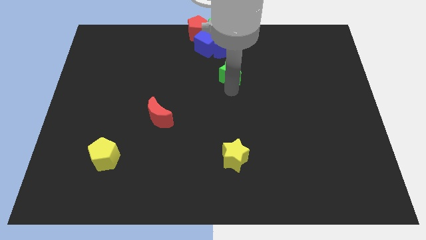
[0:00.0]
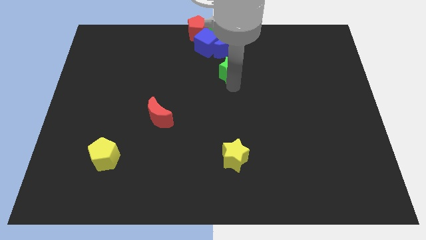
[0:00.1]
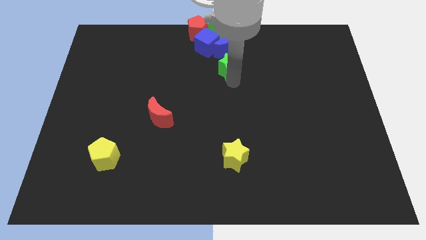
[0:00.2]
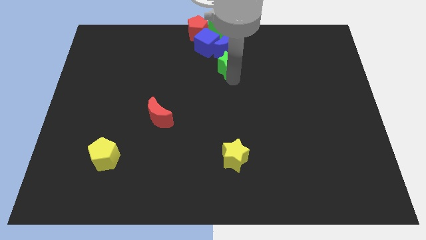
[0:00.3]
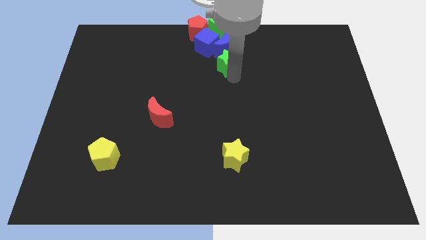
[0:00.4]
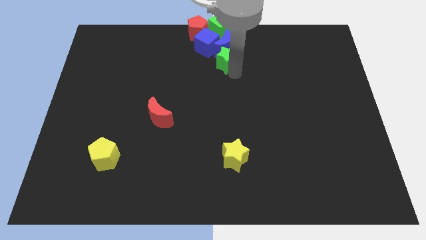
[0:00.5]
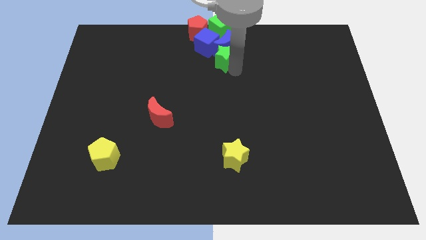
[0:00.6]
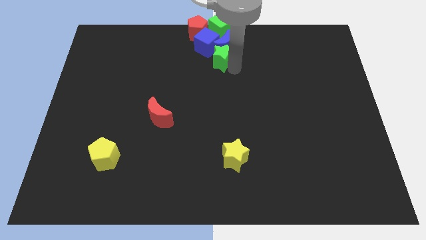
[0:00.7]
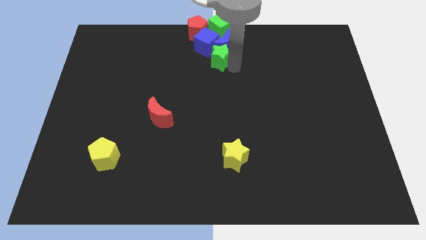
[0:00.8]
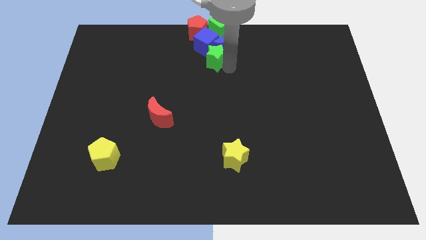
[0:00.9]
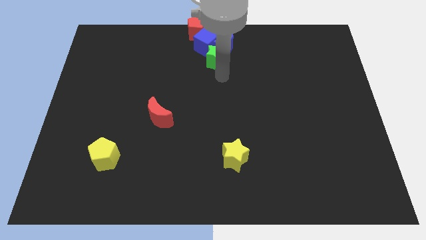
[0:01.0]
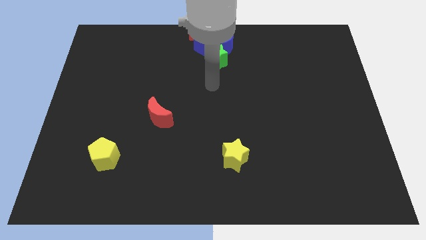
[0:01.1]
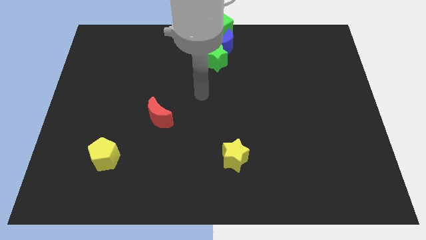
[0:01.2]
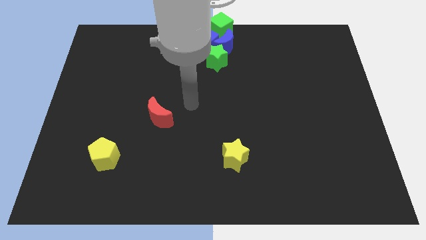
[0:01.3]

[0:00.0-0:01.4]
place the green star below the blue crescent

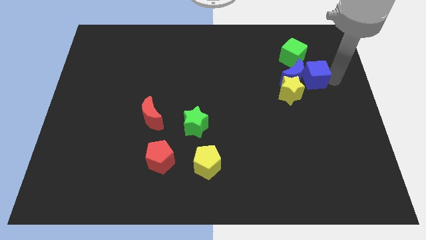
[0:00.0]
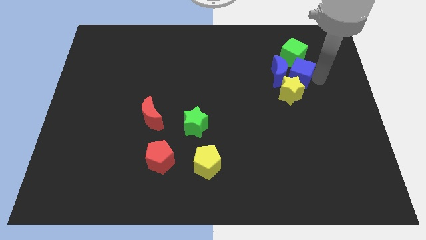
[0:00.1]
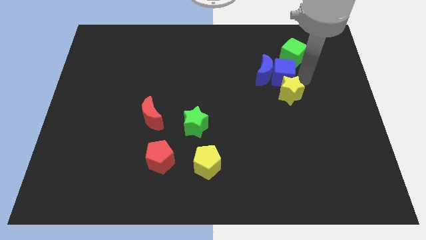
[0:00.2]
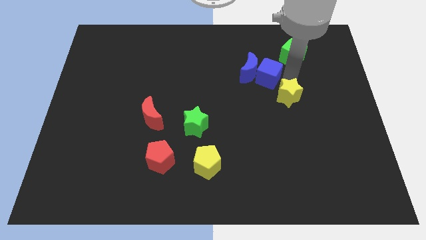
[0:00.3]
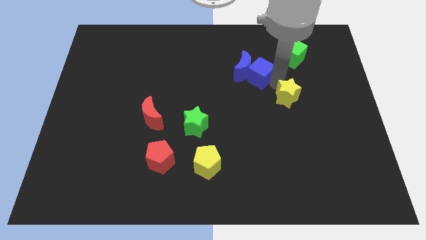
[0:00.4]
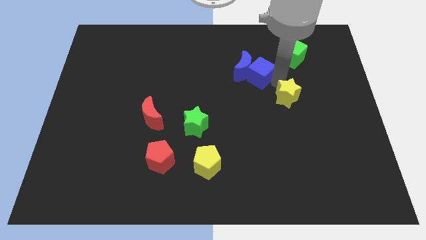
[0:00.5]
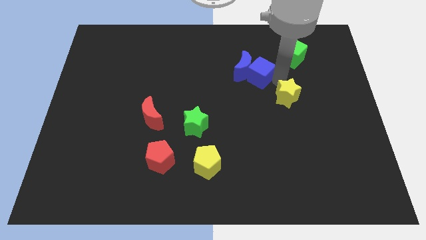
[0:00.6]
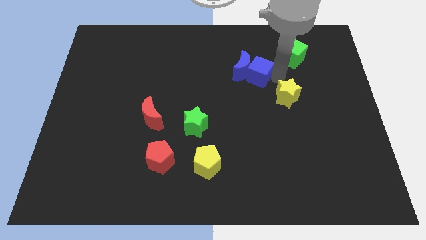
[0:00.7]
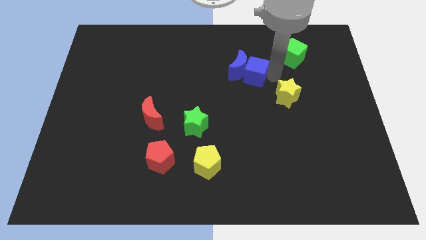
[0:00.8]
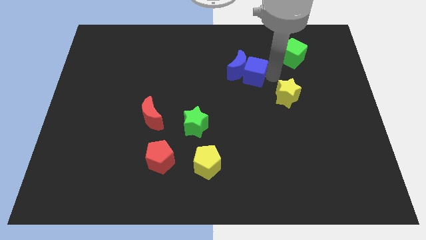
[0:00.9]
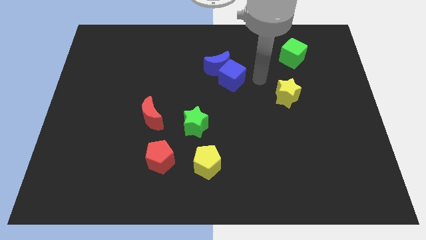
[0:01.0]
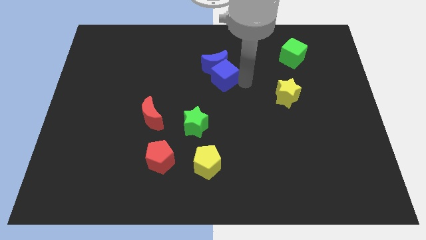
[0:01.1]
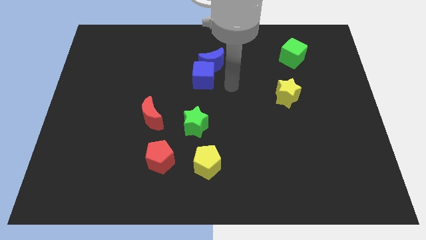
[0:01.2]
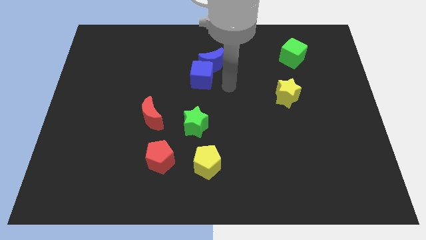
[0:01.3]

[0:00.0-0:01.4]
push blue cube towards middle of the board

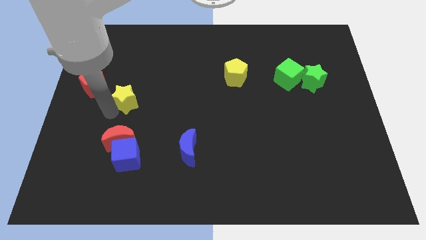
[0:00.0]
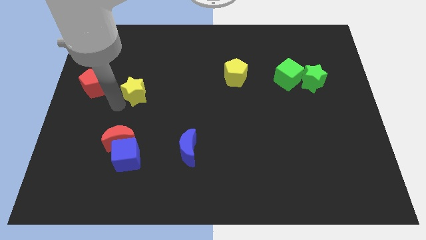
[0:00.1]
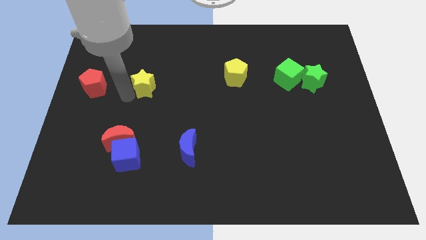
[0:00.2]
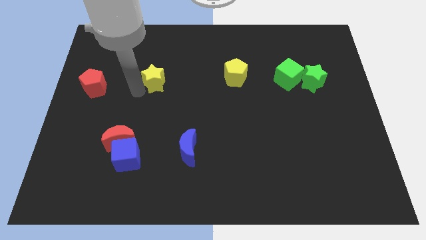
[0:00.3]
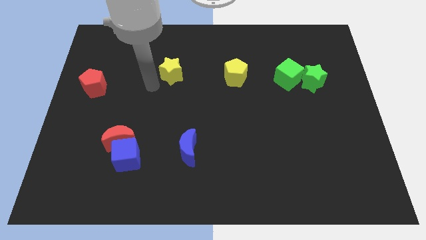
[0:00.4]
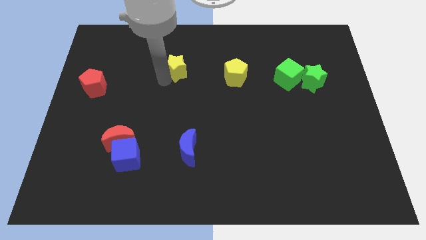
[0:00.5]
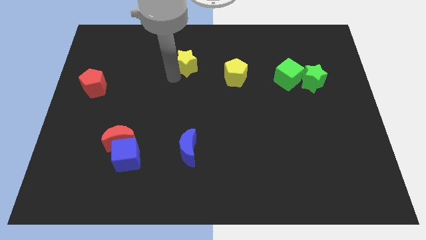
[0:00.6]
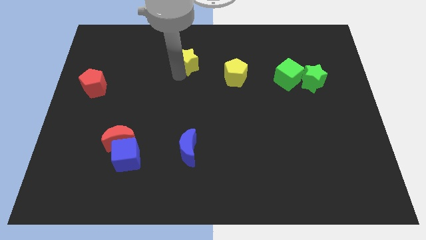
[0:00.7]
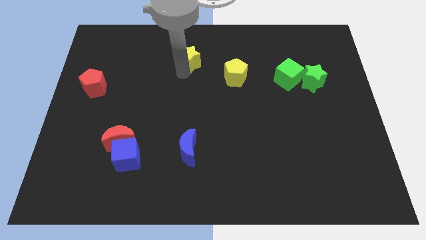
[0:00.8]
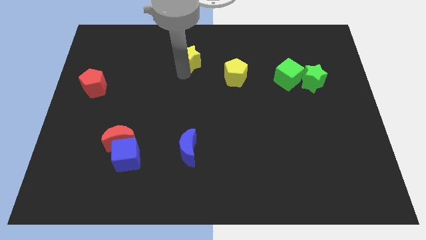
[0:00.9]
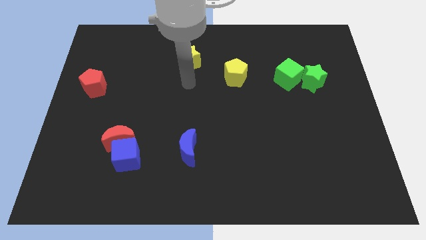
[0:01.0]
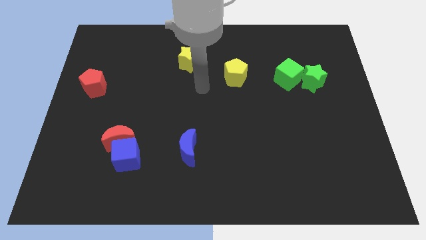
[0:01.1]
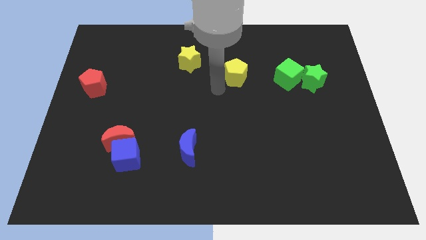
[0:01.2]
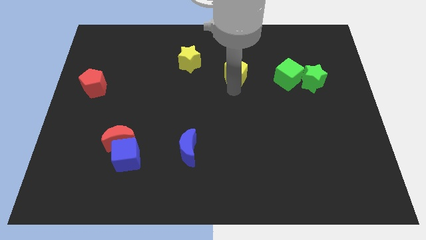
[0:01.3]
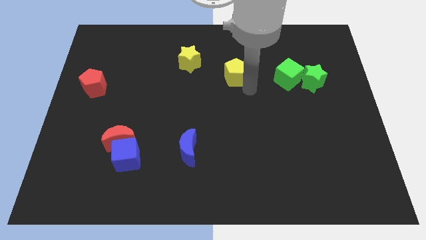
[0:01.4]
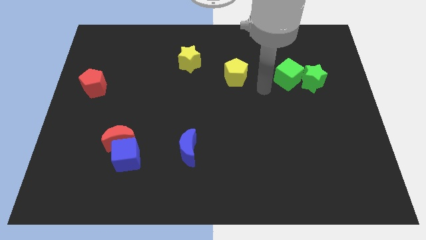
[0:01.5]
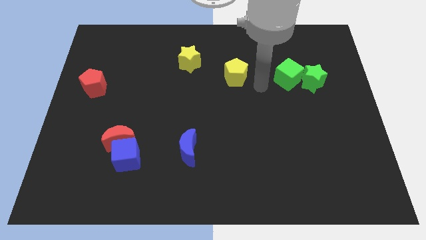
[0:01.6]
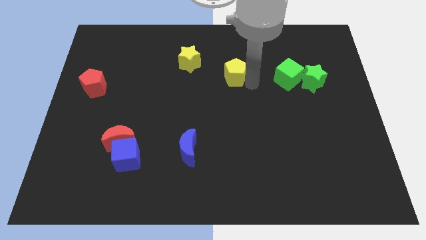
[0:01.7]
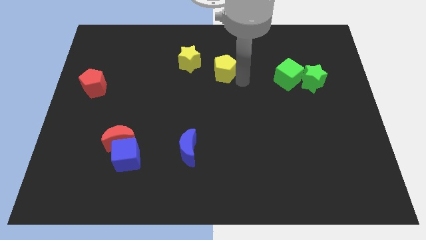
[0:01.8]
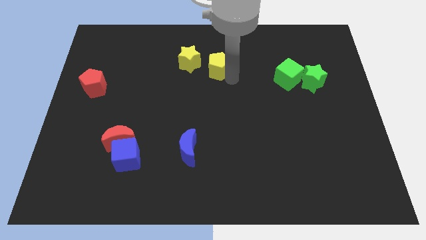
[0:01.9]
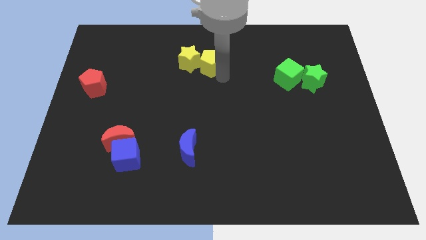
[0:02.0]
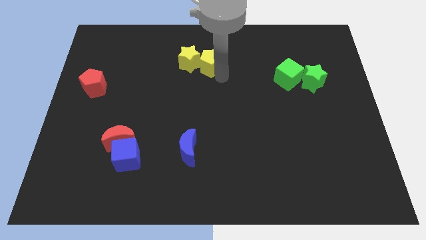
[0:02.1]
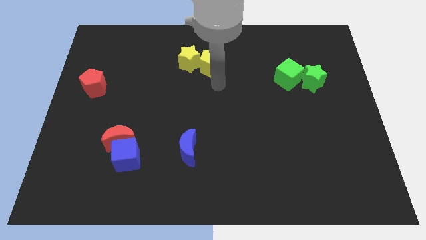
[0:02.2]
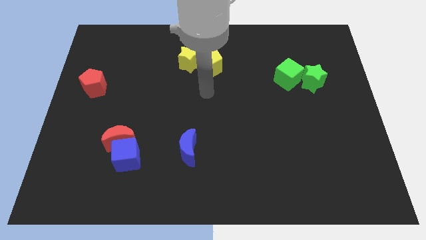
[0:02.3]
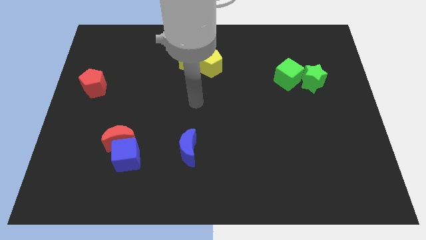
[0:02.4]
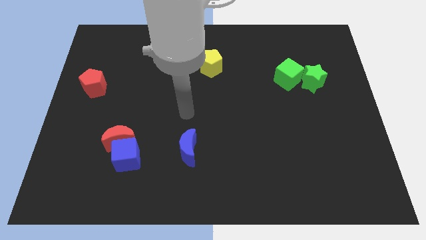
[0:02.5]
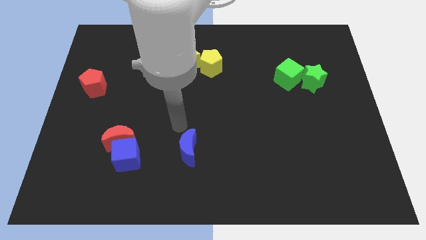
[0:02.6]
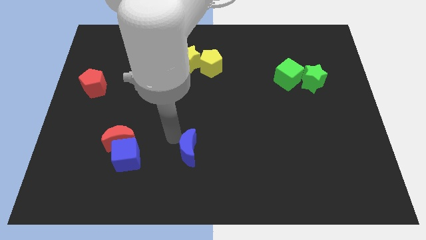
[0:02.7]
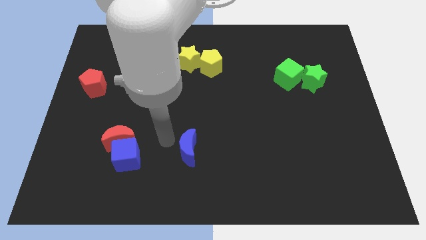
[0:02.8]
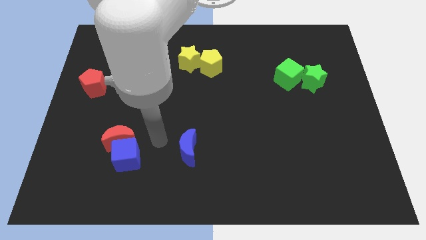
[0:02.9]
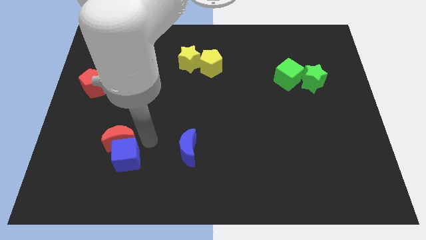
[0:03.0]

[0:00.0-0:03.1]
move yellow pentagon beside yellow star

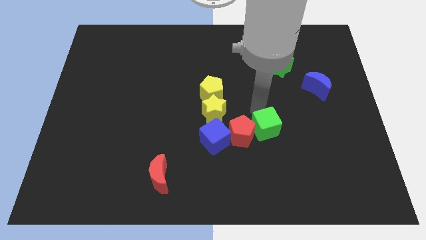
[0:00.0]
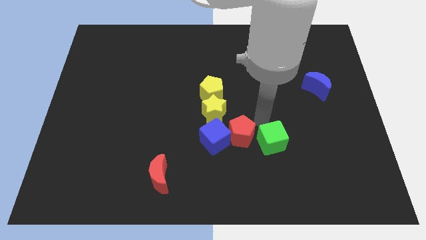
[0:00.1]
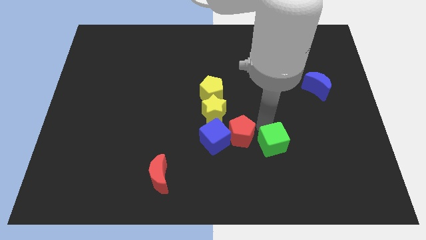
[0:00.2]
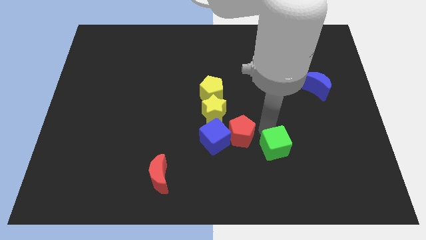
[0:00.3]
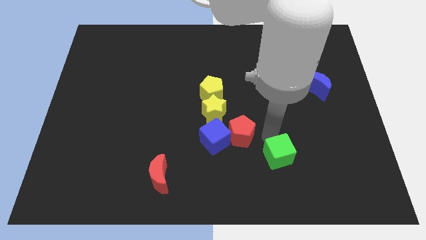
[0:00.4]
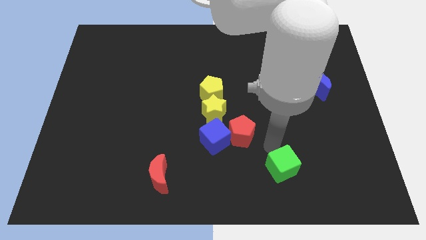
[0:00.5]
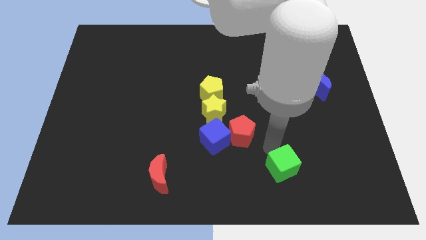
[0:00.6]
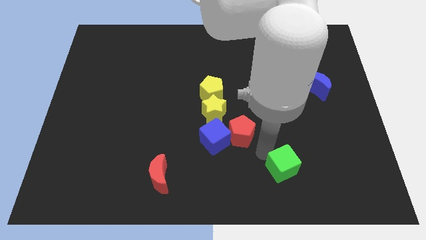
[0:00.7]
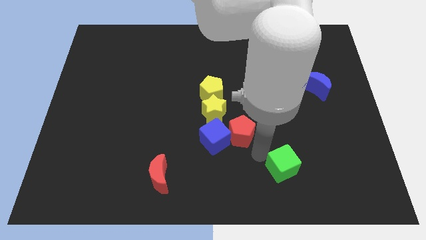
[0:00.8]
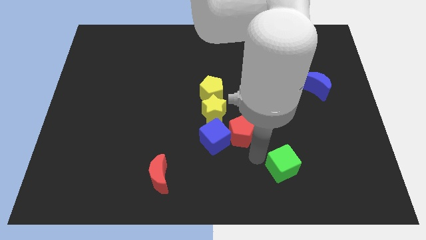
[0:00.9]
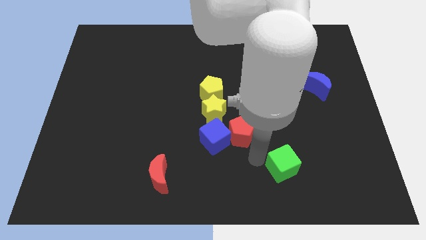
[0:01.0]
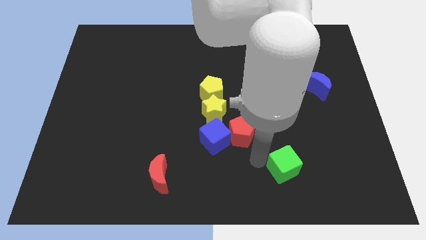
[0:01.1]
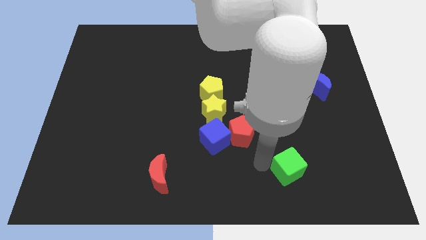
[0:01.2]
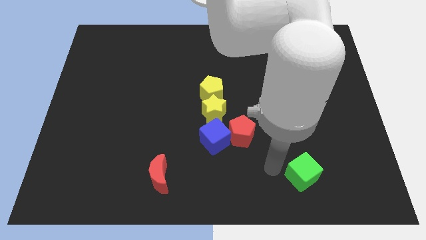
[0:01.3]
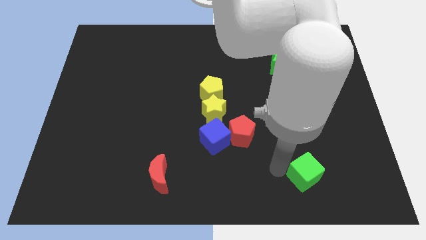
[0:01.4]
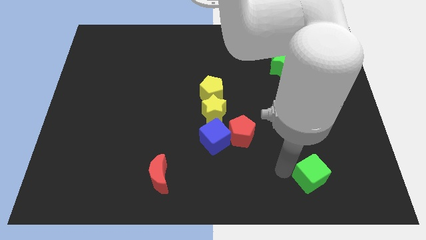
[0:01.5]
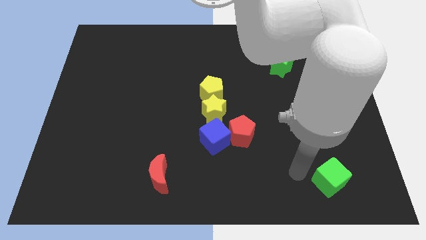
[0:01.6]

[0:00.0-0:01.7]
separate green cube from the group of blocks

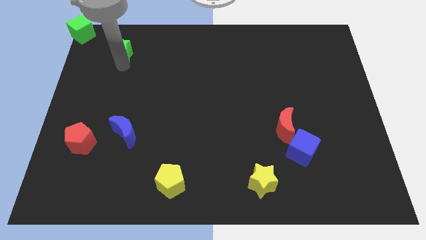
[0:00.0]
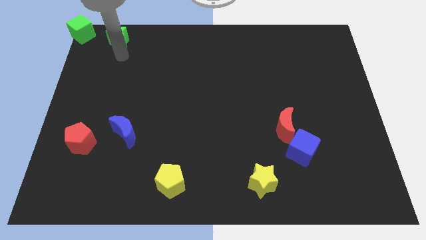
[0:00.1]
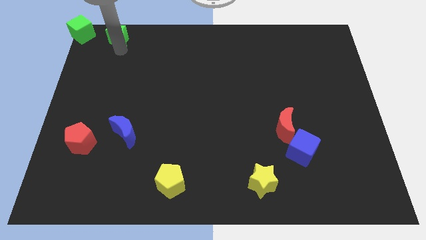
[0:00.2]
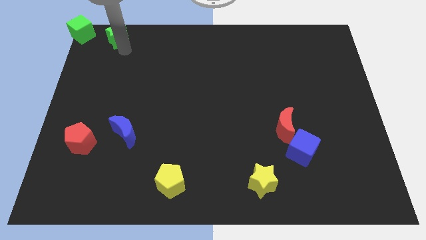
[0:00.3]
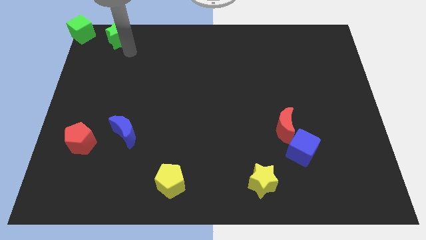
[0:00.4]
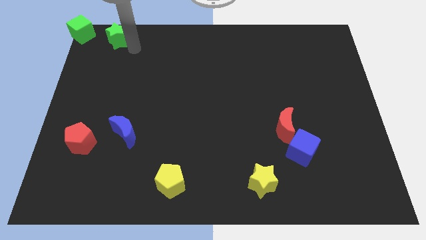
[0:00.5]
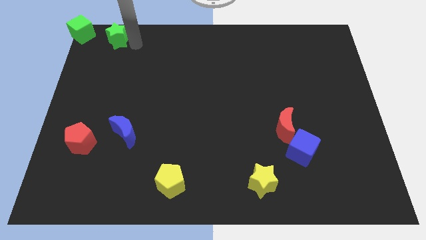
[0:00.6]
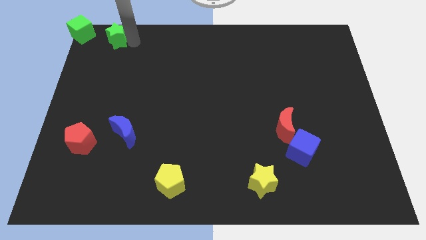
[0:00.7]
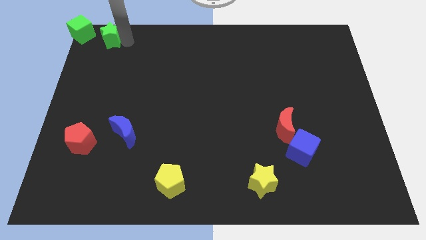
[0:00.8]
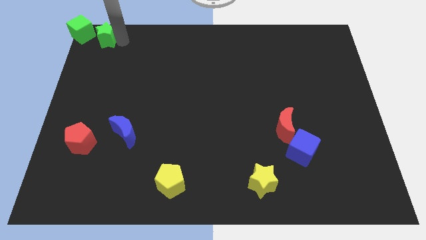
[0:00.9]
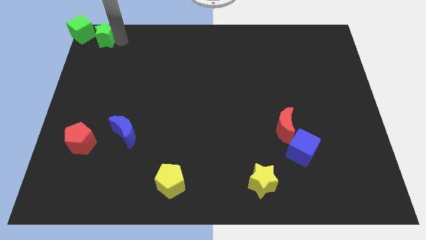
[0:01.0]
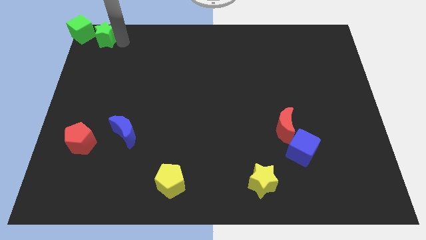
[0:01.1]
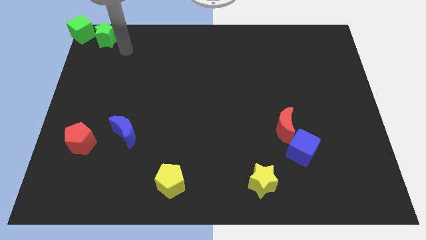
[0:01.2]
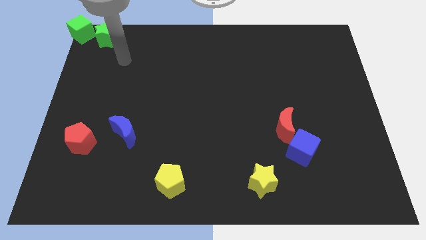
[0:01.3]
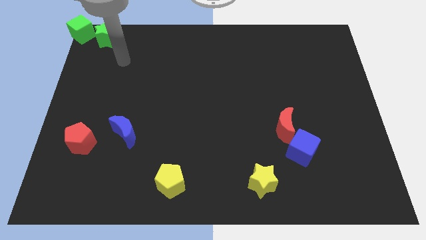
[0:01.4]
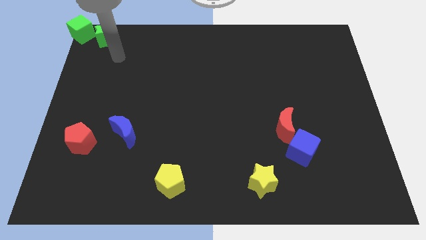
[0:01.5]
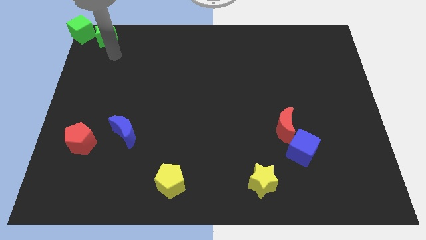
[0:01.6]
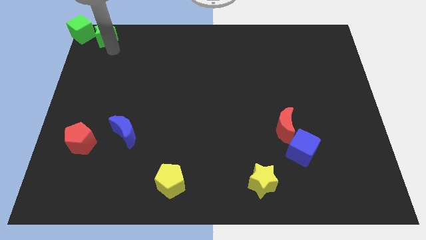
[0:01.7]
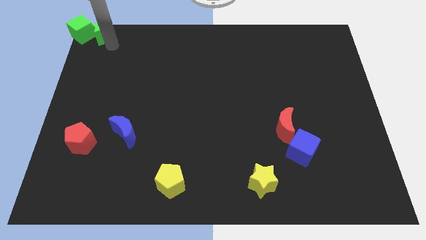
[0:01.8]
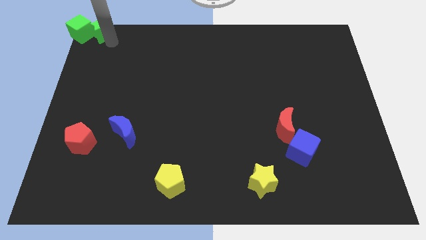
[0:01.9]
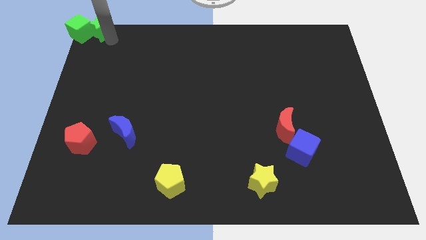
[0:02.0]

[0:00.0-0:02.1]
push the green star into green cube
